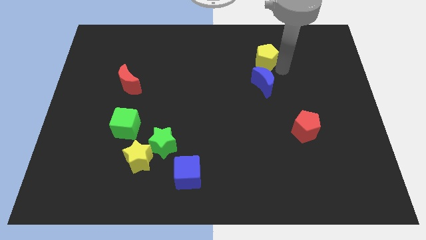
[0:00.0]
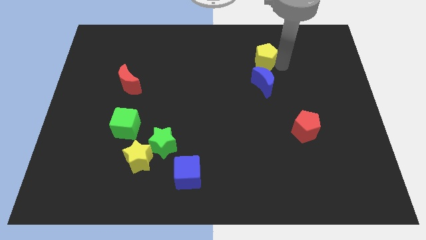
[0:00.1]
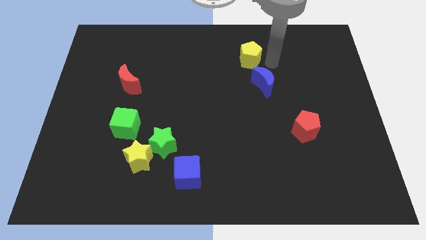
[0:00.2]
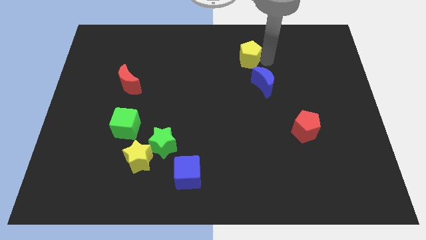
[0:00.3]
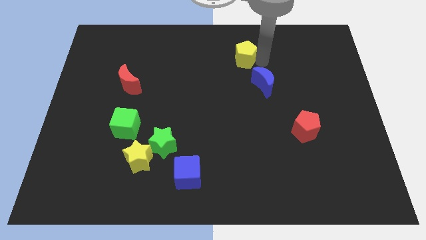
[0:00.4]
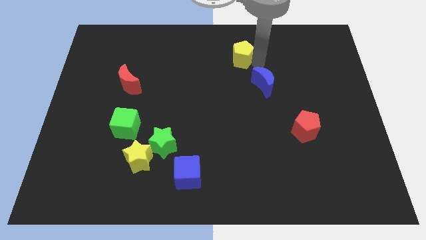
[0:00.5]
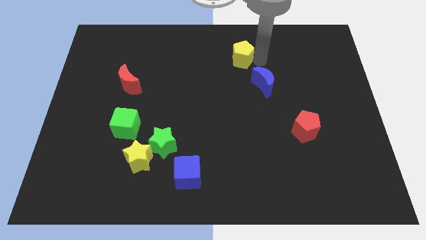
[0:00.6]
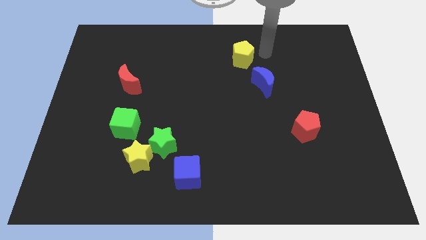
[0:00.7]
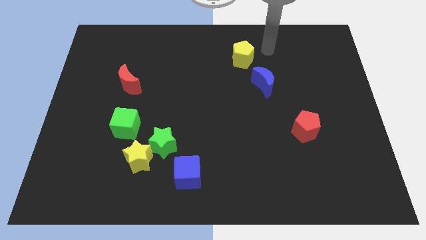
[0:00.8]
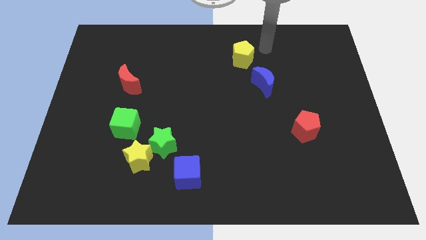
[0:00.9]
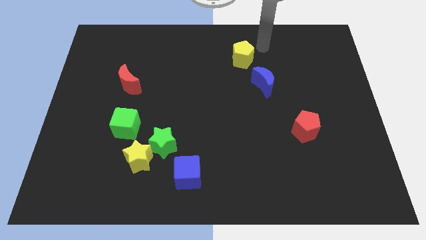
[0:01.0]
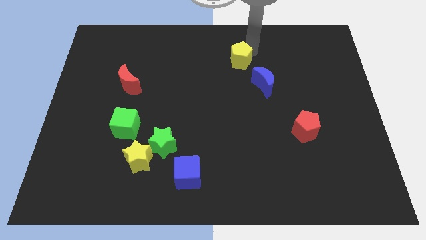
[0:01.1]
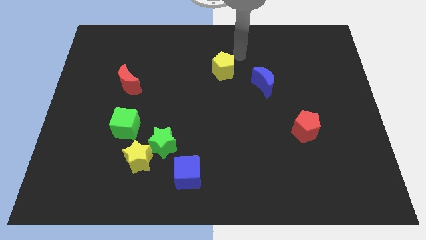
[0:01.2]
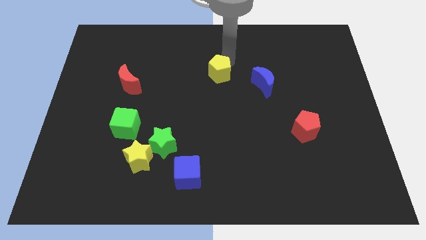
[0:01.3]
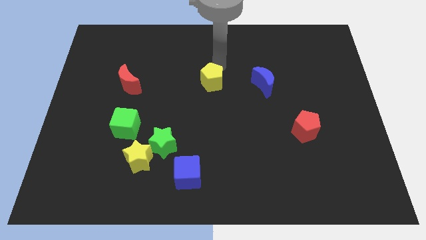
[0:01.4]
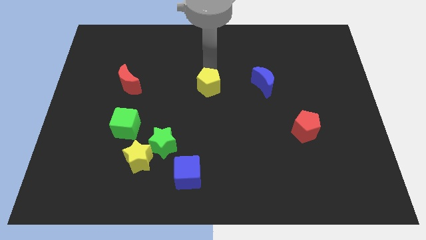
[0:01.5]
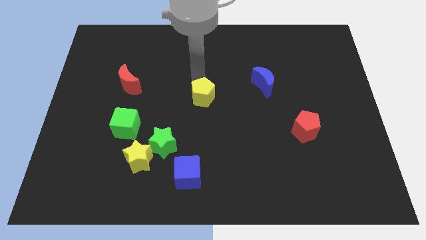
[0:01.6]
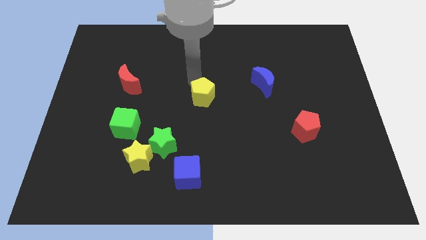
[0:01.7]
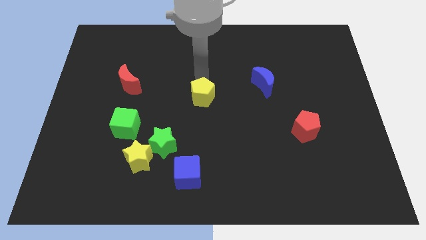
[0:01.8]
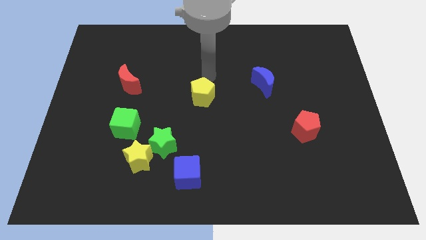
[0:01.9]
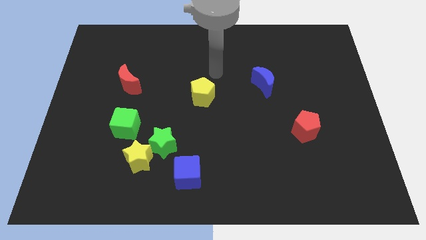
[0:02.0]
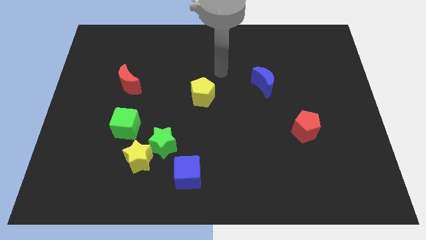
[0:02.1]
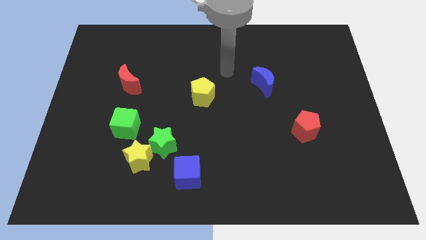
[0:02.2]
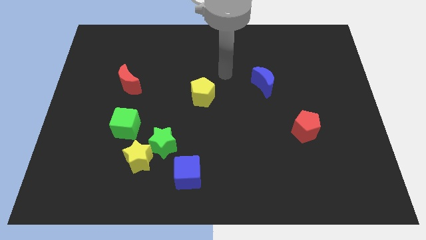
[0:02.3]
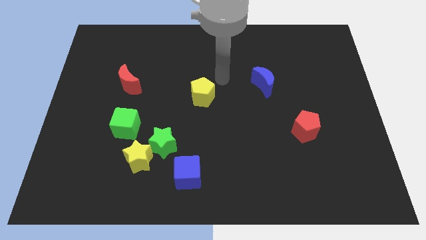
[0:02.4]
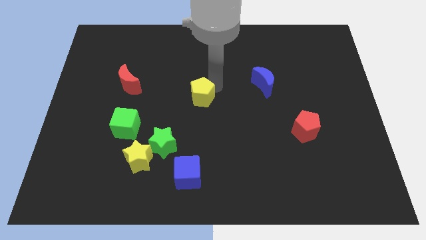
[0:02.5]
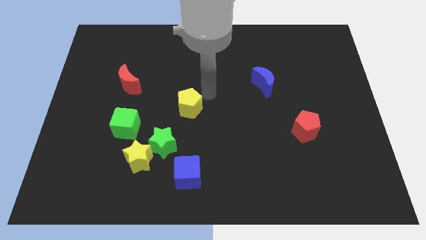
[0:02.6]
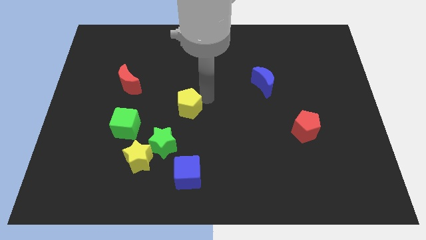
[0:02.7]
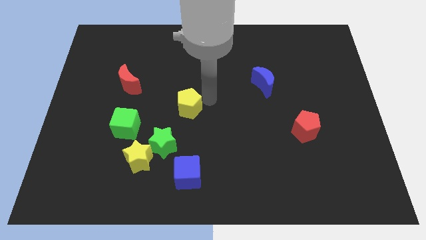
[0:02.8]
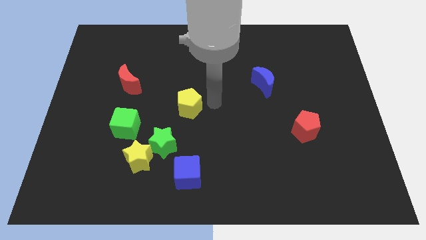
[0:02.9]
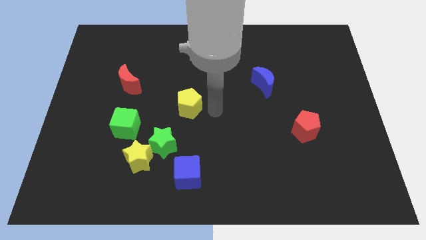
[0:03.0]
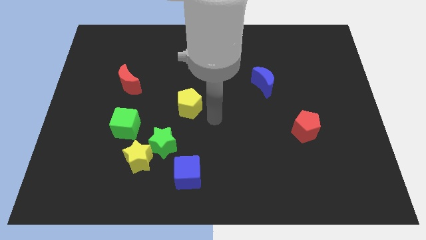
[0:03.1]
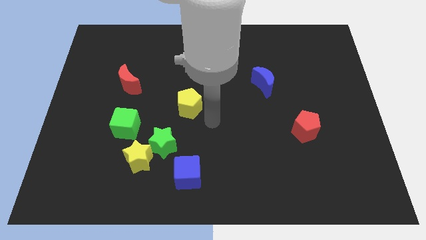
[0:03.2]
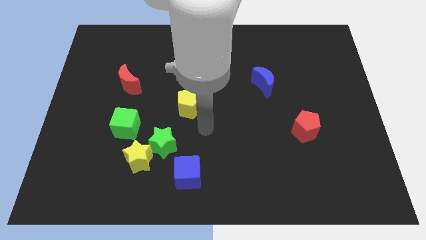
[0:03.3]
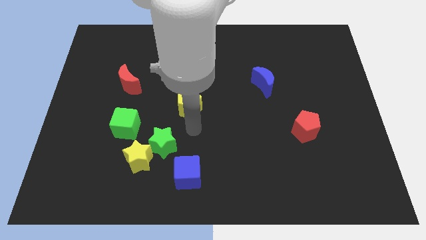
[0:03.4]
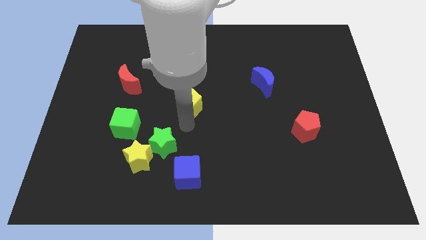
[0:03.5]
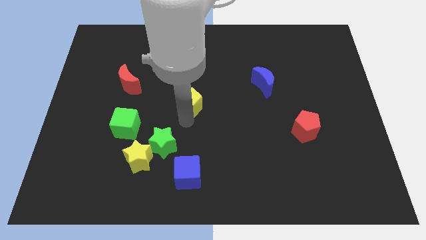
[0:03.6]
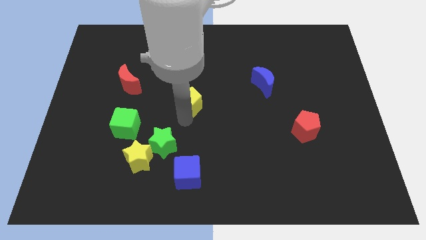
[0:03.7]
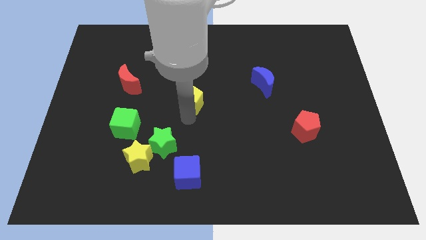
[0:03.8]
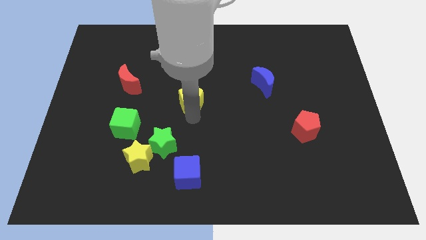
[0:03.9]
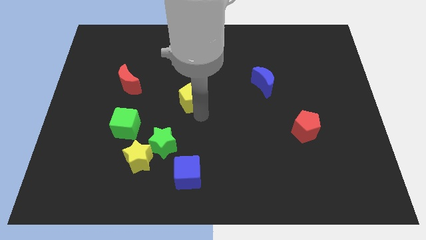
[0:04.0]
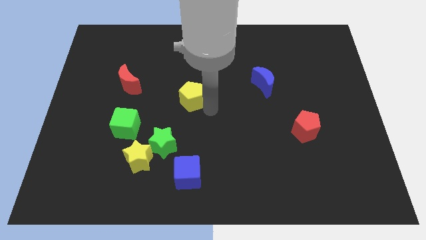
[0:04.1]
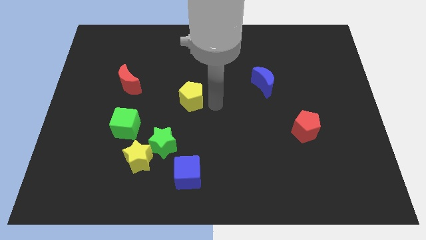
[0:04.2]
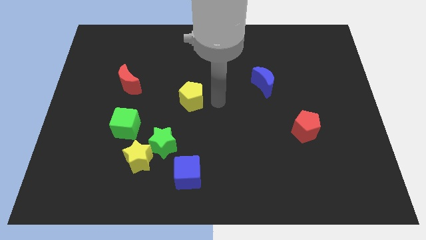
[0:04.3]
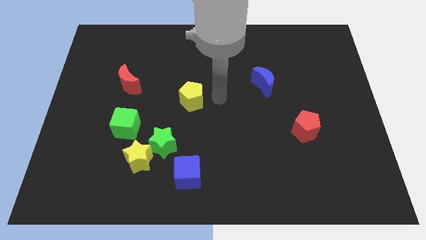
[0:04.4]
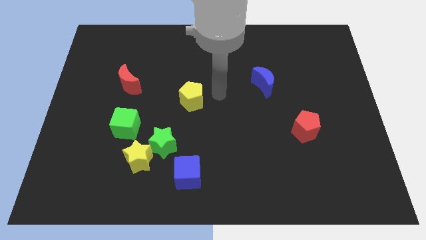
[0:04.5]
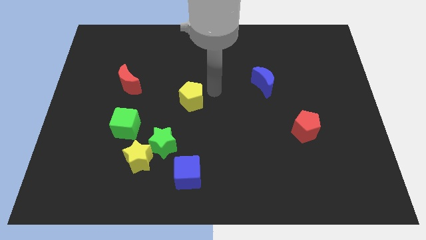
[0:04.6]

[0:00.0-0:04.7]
place the yellow pentagon vertically above the blue cube

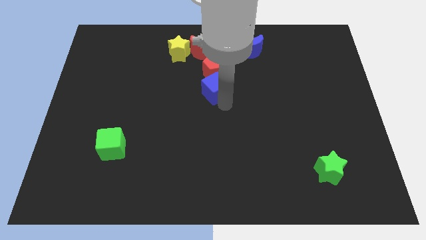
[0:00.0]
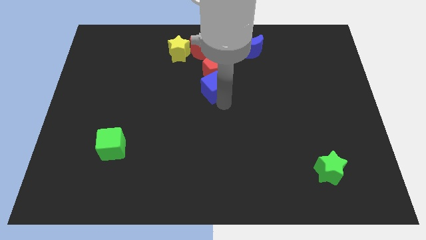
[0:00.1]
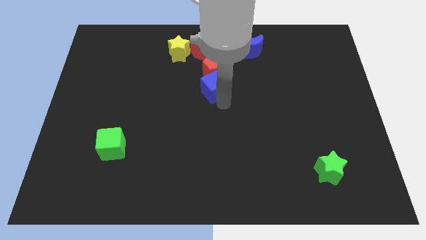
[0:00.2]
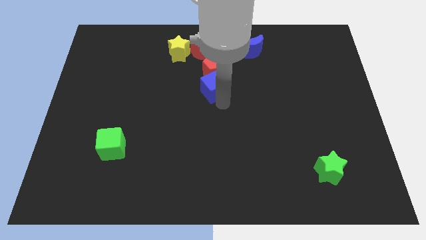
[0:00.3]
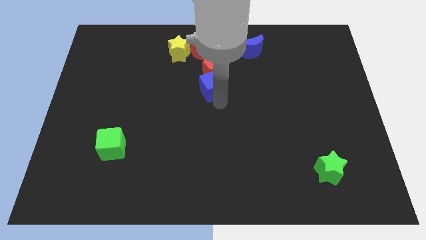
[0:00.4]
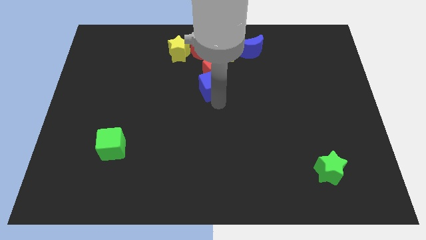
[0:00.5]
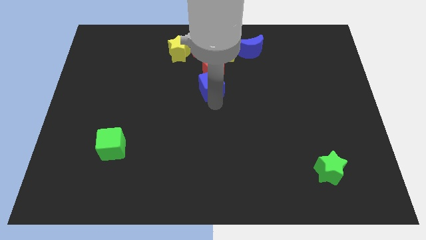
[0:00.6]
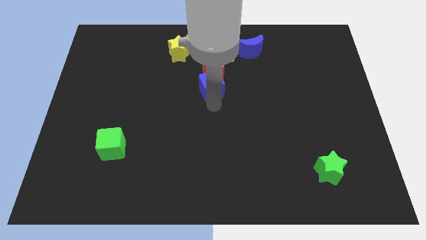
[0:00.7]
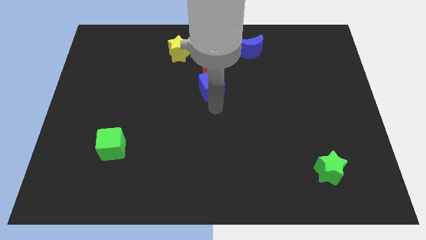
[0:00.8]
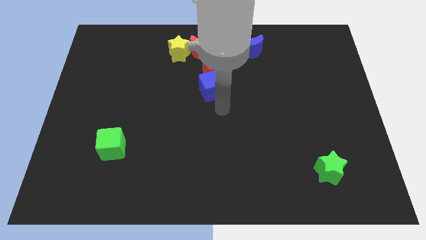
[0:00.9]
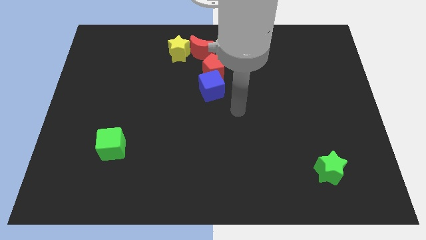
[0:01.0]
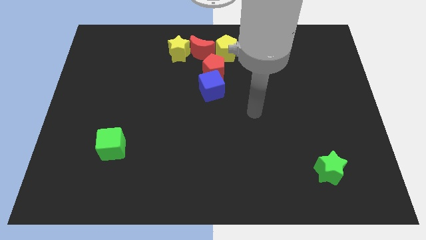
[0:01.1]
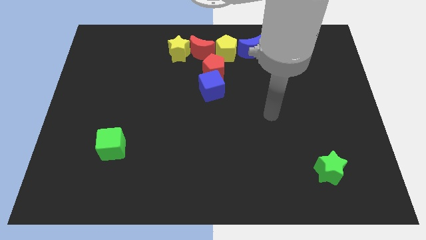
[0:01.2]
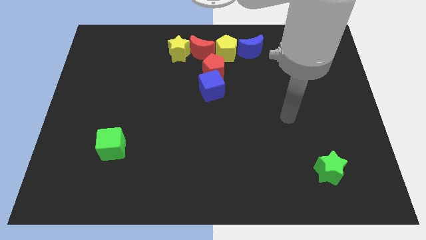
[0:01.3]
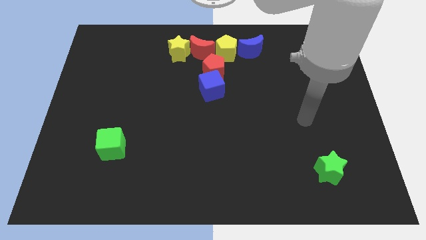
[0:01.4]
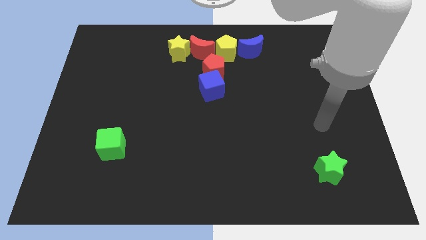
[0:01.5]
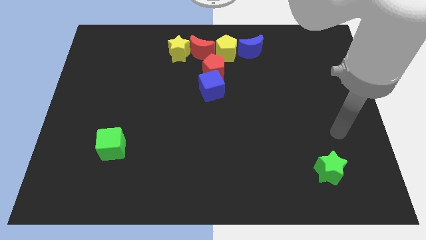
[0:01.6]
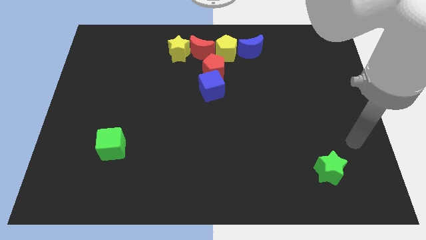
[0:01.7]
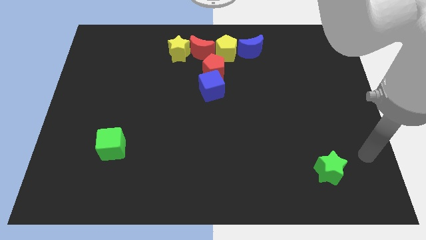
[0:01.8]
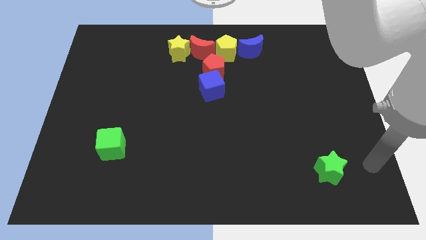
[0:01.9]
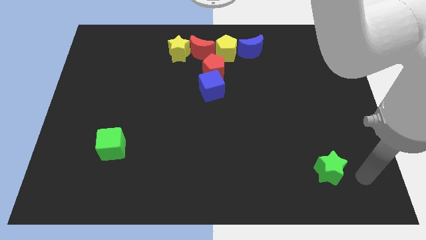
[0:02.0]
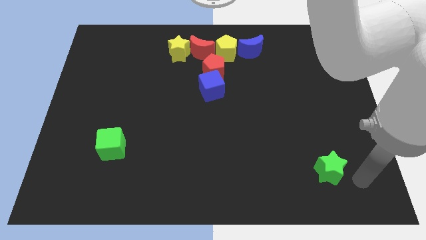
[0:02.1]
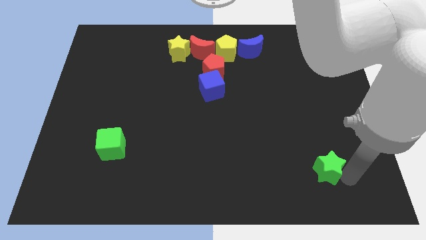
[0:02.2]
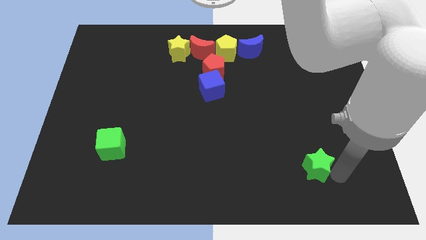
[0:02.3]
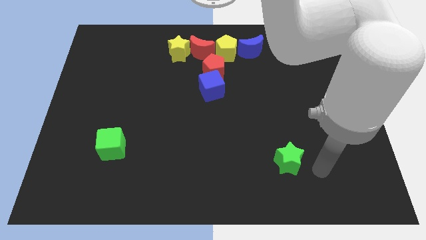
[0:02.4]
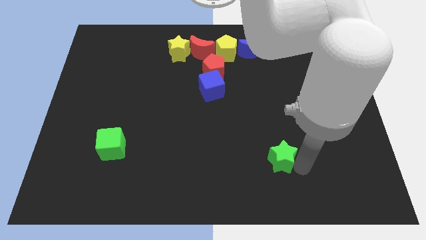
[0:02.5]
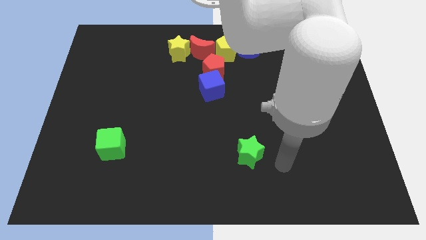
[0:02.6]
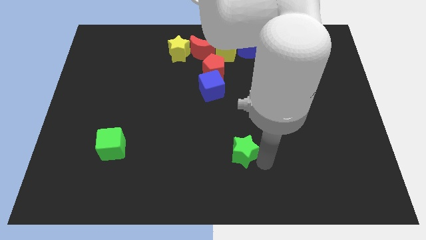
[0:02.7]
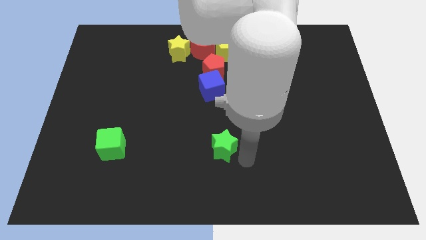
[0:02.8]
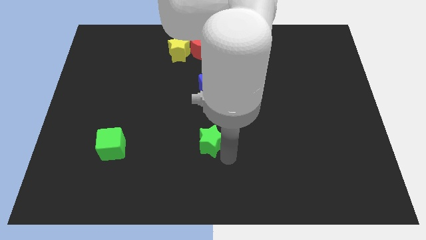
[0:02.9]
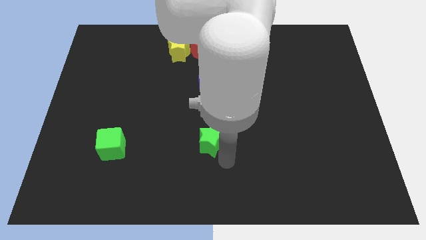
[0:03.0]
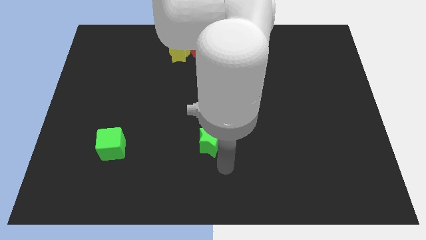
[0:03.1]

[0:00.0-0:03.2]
push the green star vertically below blue cube

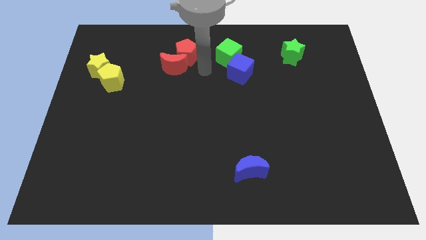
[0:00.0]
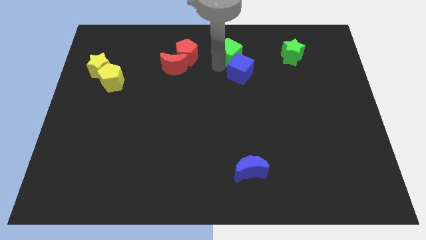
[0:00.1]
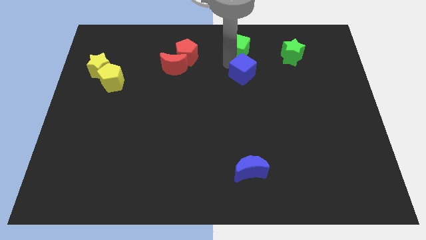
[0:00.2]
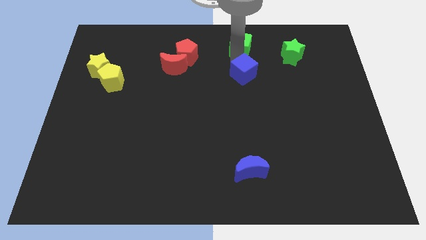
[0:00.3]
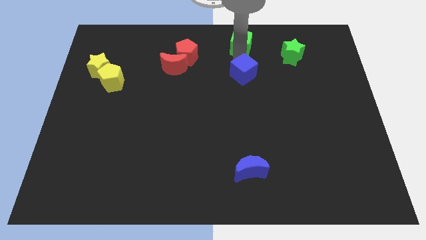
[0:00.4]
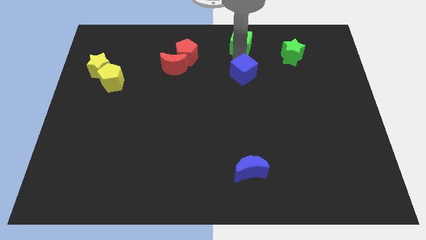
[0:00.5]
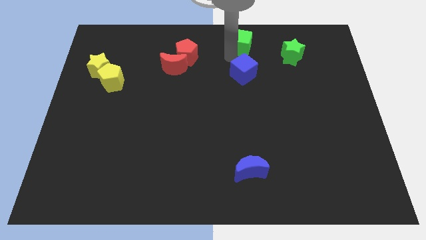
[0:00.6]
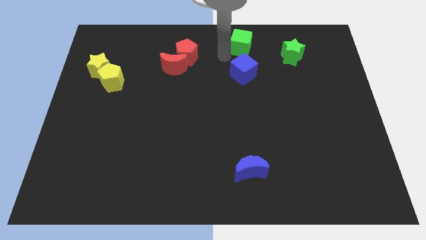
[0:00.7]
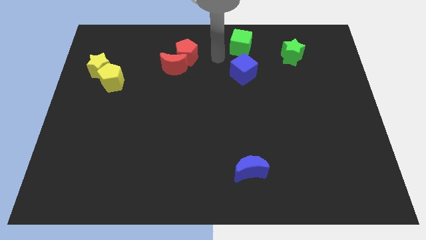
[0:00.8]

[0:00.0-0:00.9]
slightly push the green cube towards the top center of the board
